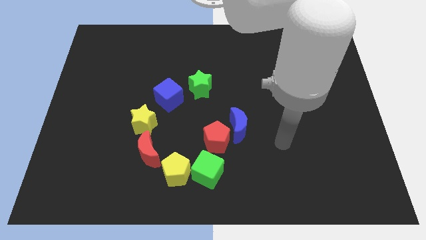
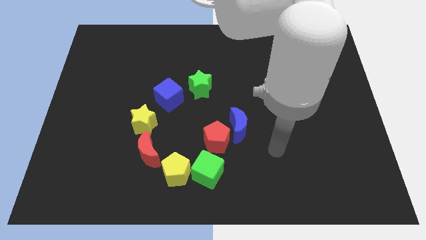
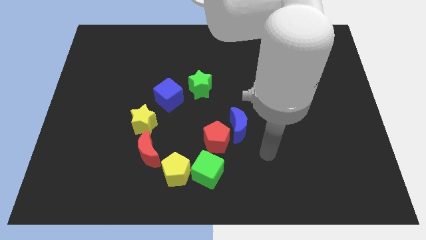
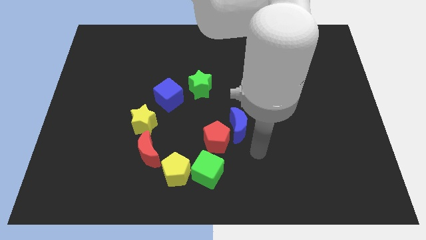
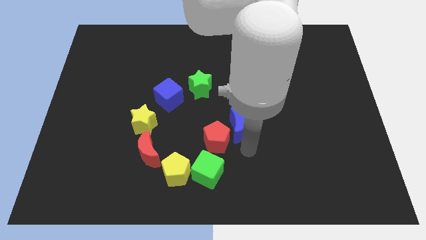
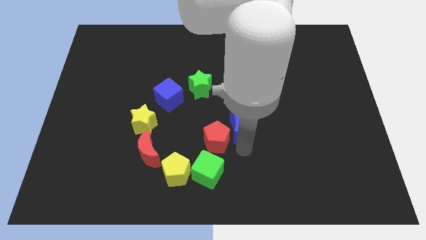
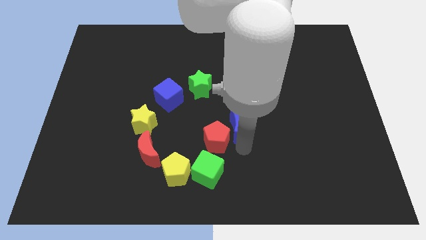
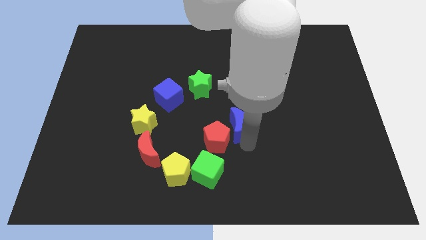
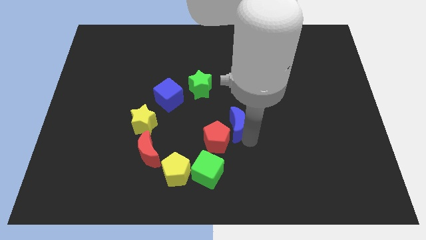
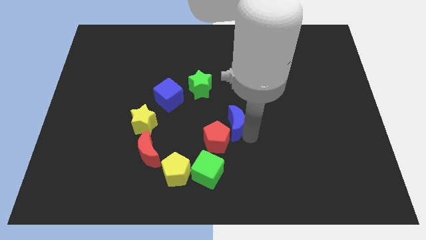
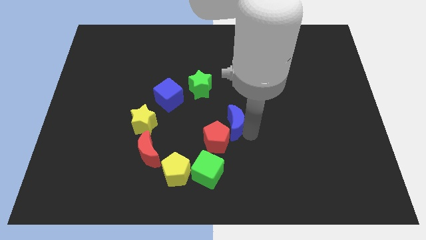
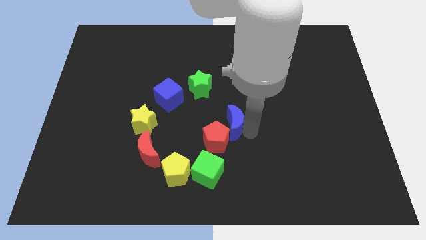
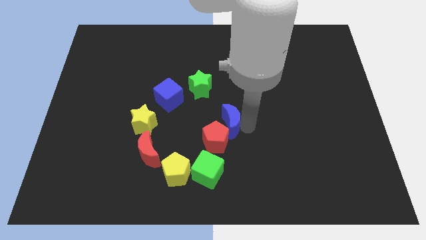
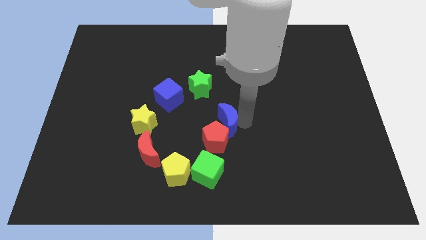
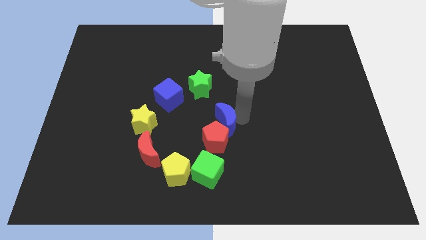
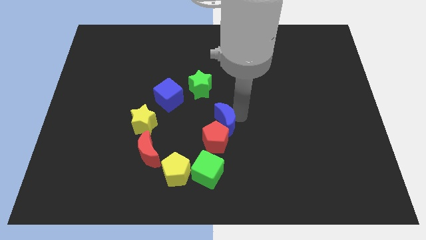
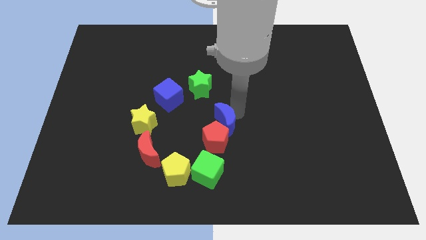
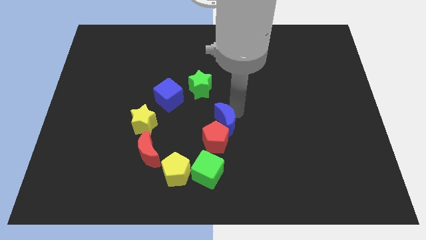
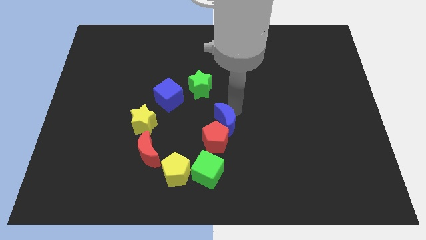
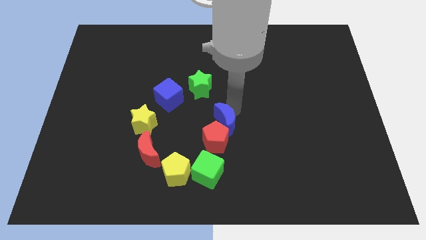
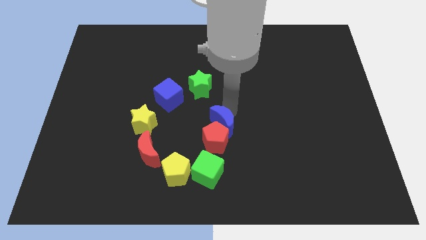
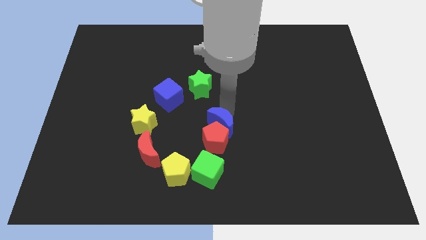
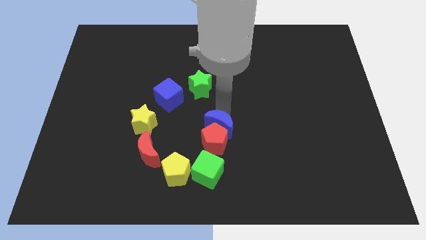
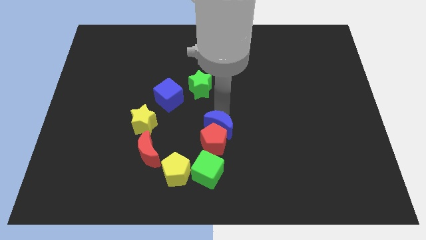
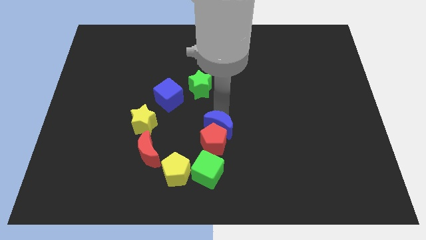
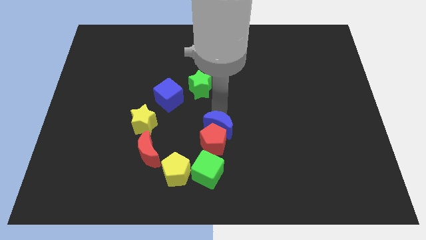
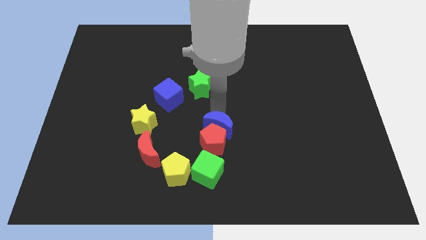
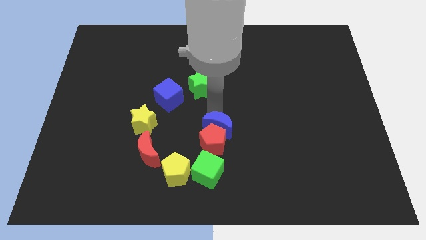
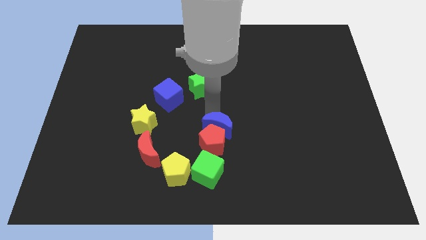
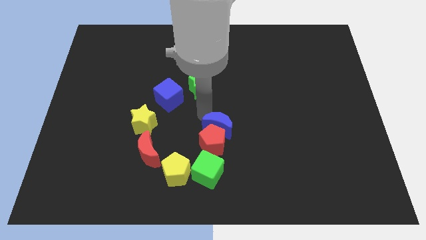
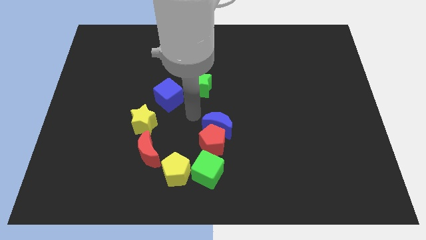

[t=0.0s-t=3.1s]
push the blue crescent into the red pentagon

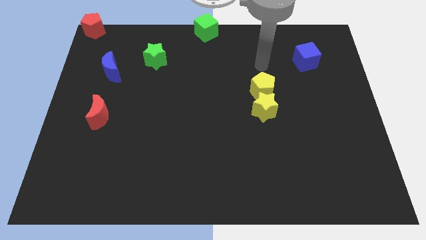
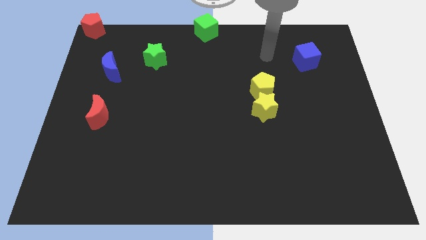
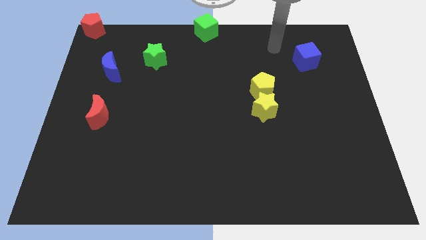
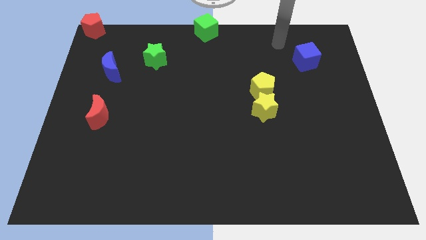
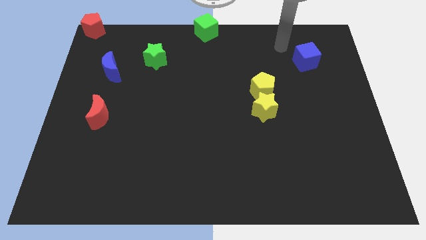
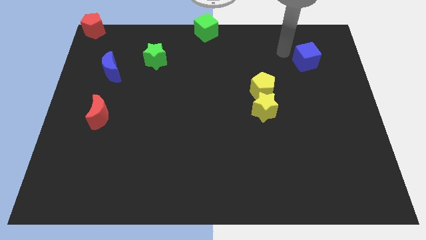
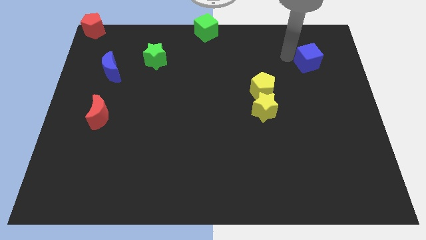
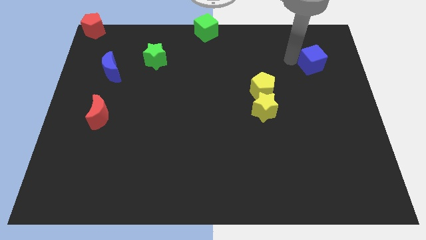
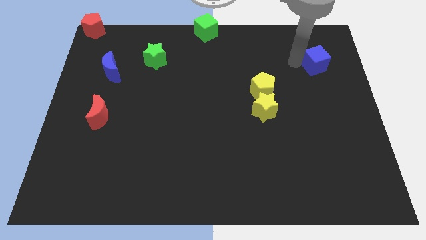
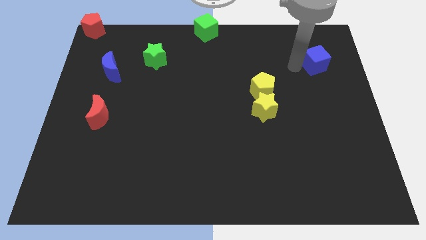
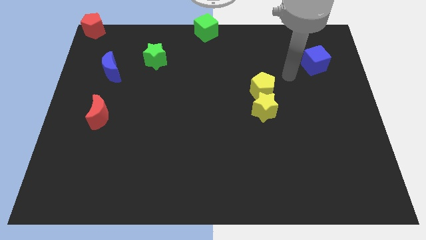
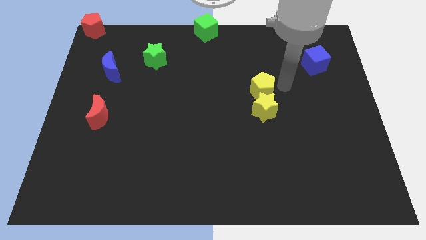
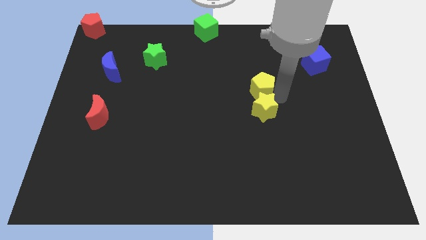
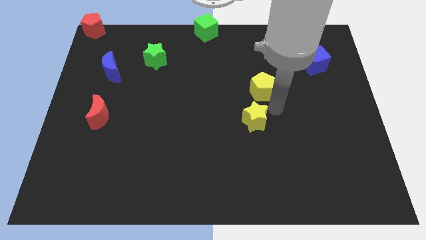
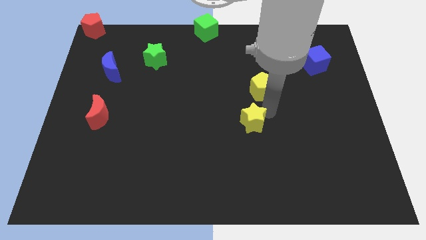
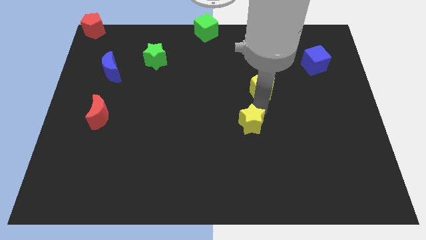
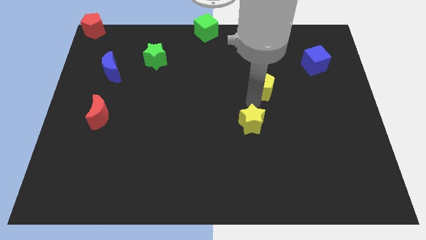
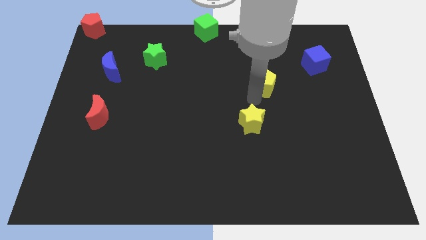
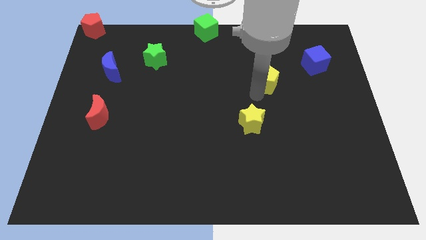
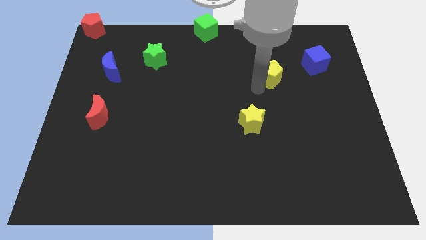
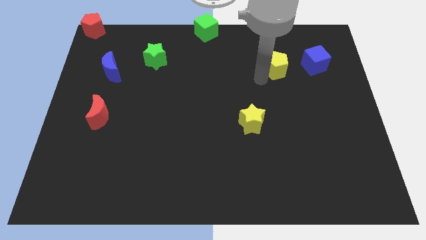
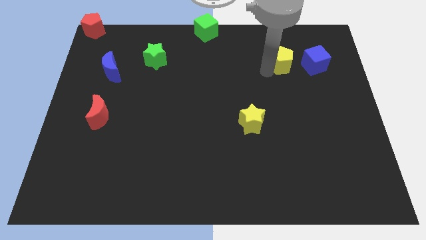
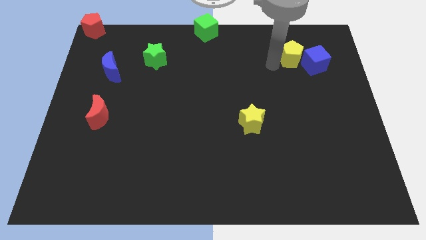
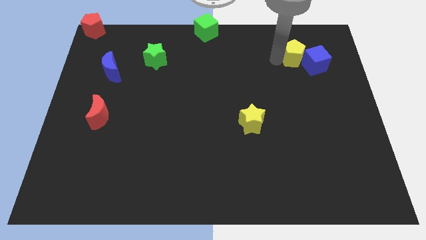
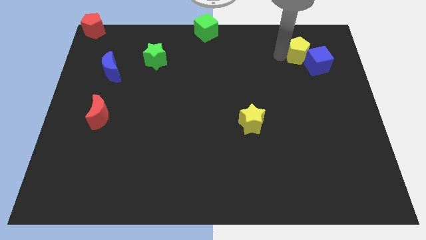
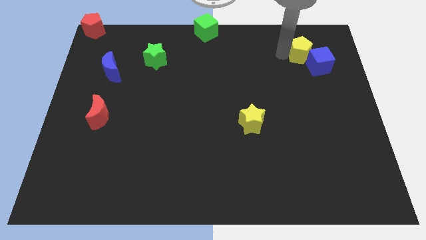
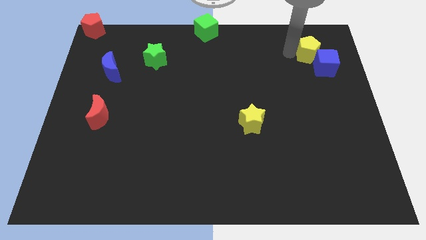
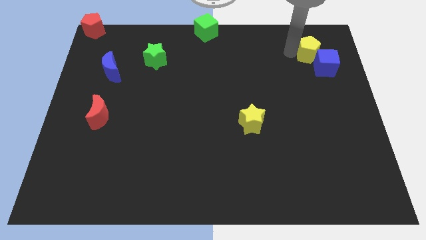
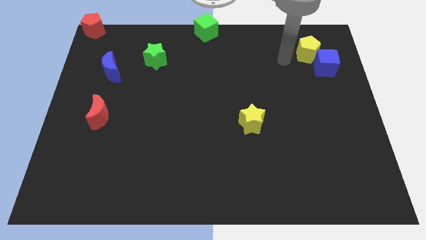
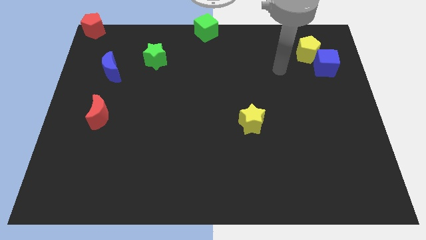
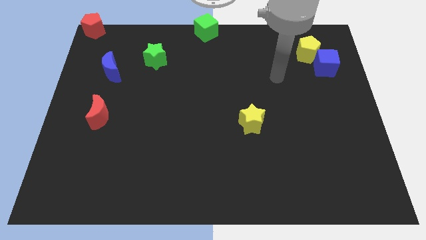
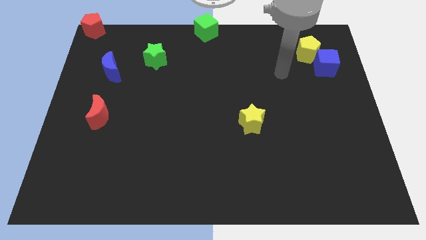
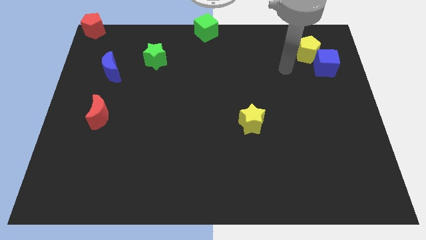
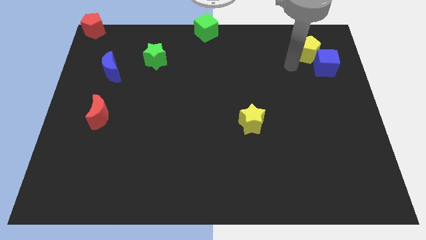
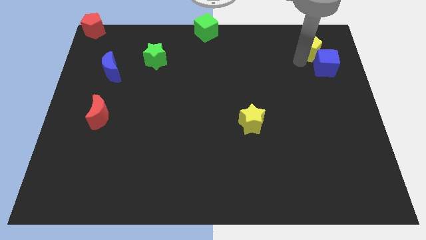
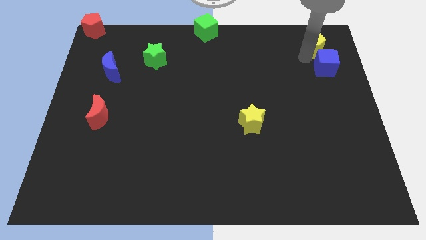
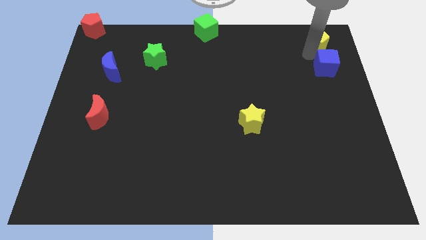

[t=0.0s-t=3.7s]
separate the yellow pentagon from the yellow star

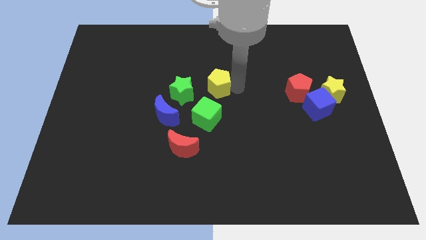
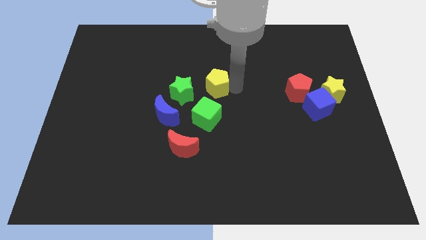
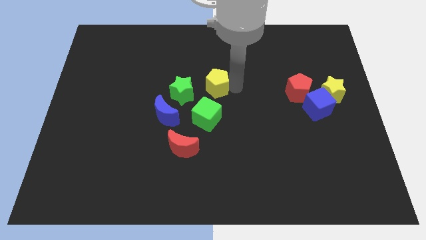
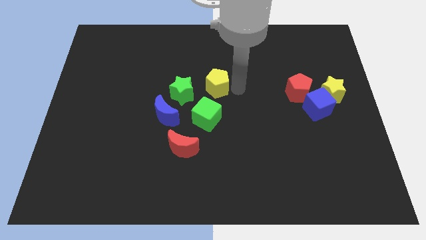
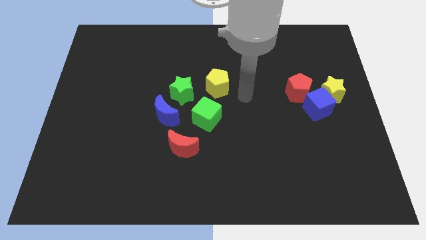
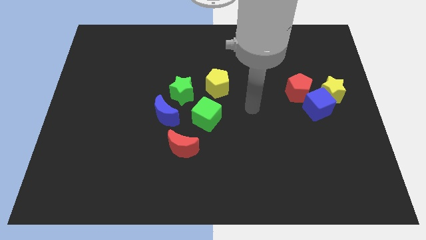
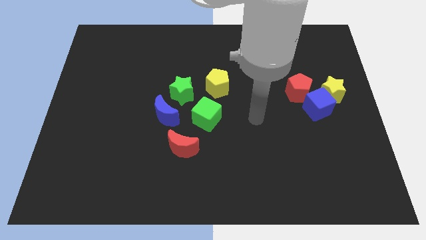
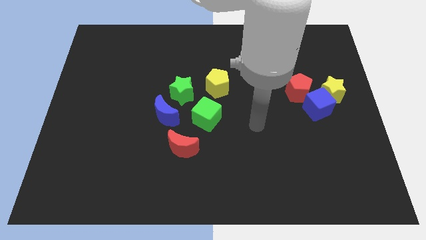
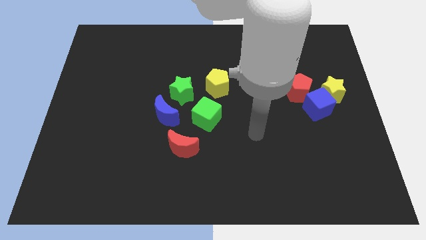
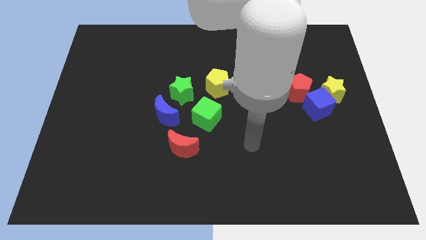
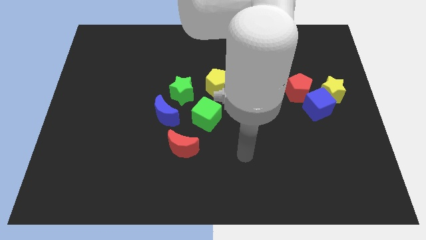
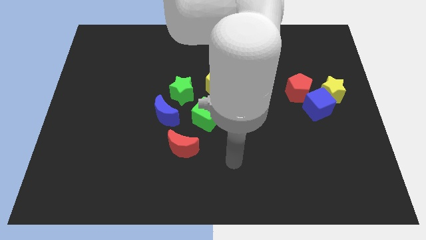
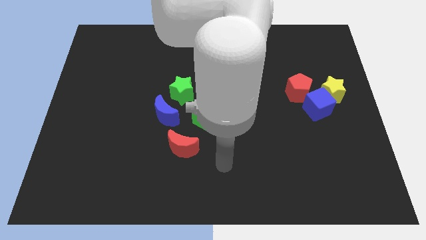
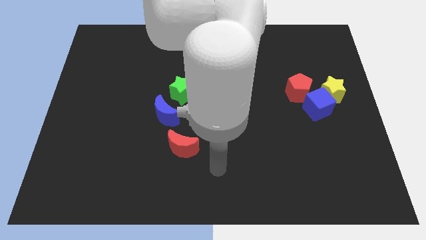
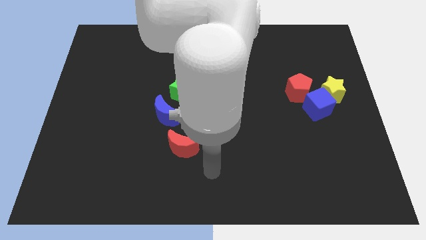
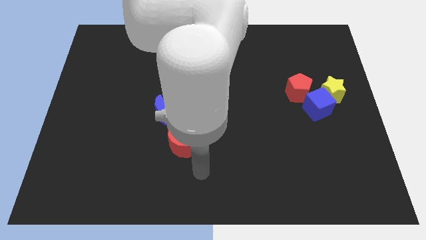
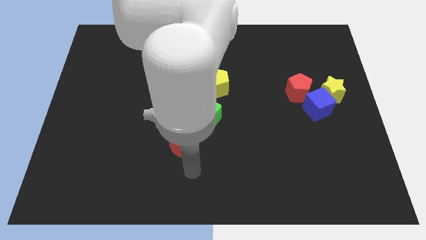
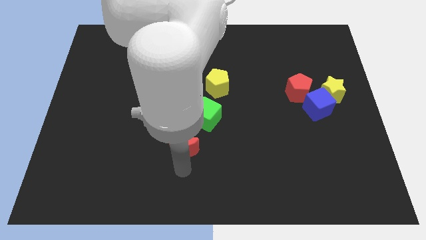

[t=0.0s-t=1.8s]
slightly push the yellow pentagon to the right side of the green star

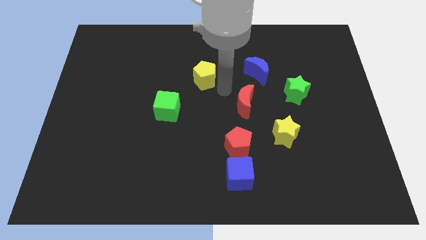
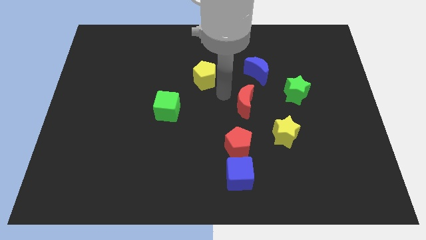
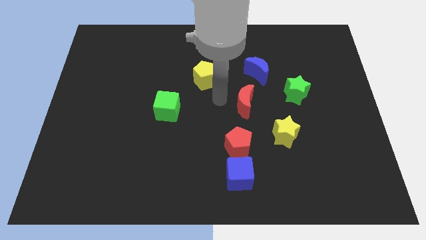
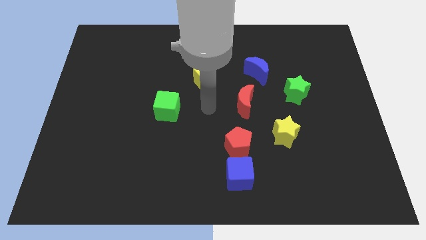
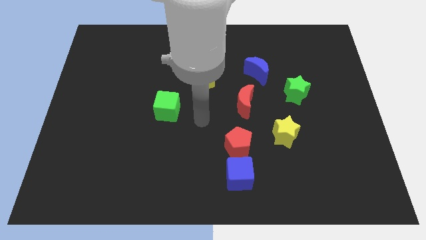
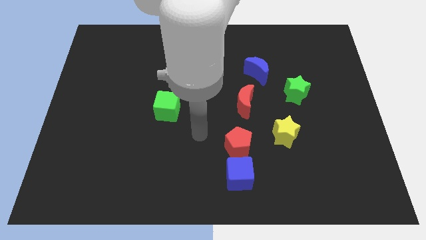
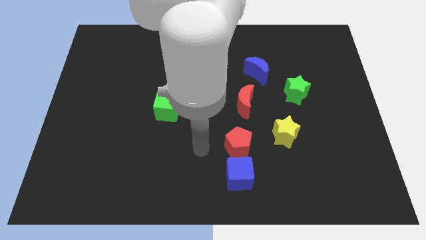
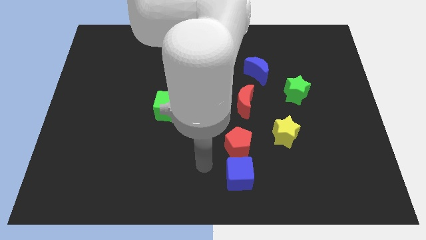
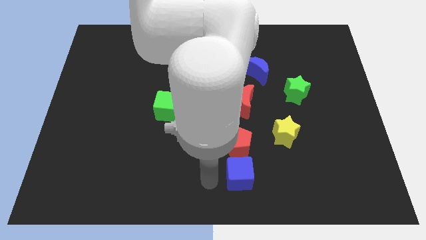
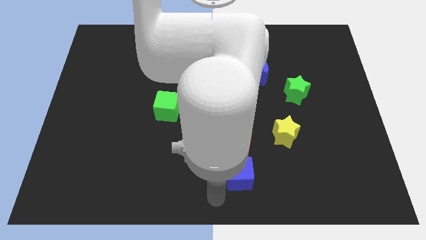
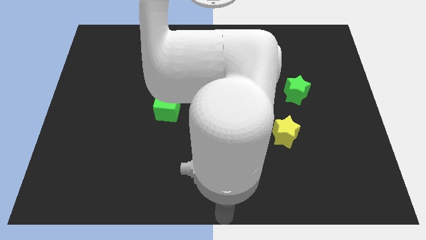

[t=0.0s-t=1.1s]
point the arm at the bottom center of the board
